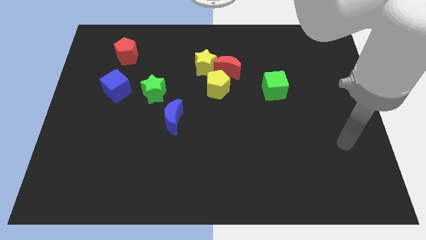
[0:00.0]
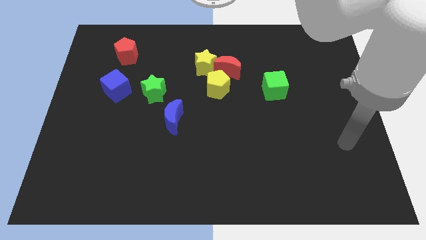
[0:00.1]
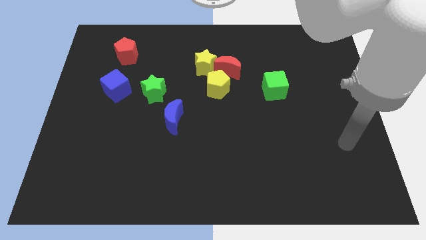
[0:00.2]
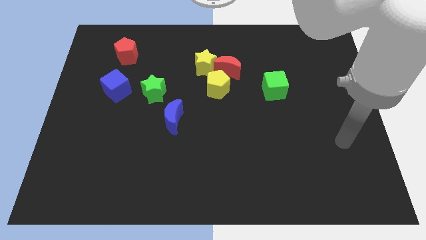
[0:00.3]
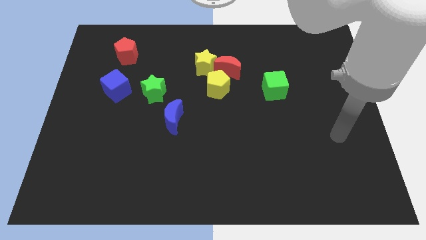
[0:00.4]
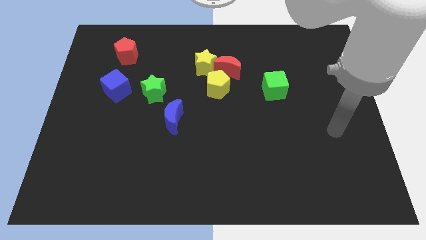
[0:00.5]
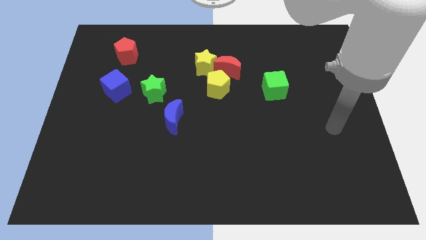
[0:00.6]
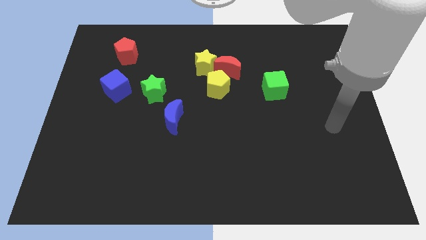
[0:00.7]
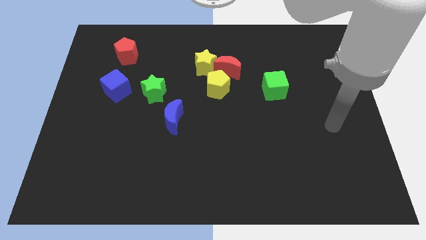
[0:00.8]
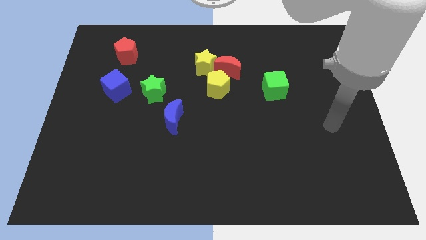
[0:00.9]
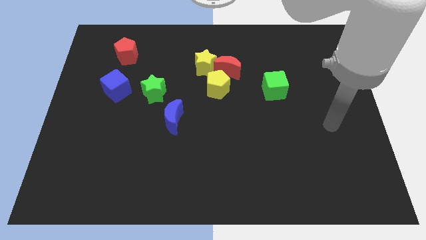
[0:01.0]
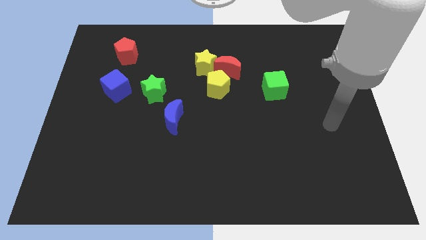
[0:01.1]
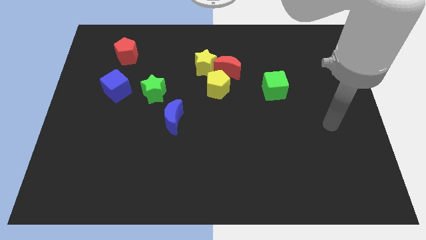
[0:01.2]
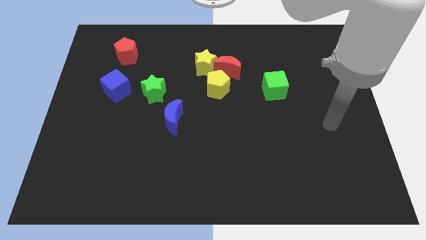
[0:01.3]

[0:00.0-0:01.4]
place your arm vertical bottom right to the green cube

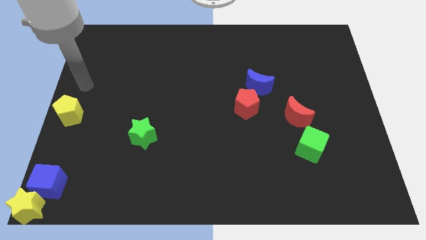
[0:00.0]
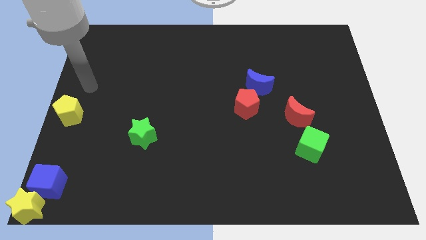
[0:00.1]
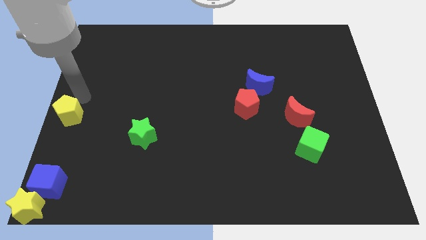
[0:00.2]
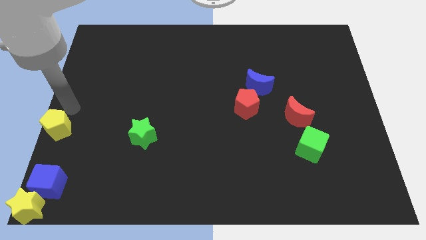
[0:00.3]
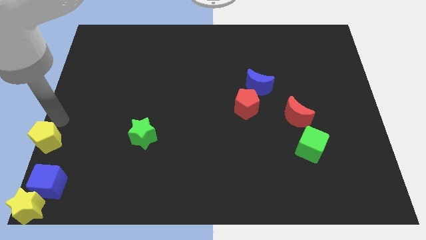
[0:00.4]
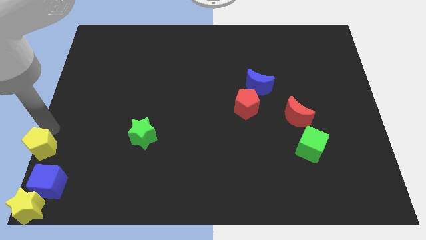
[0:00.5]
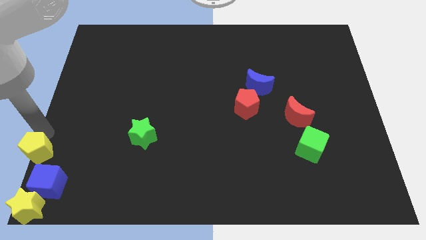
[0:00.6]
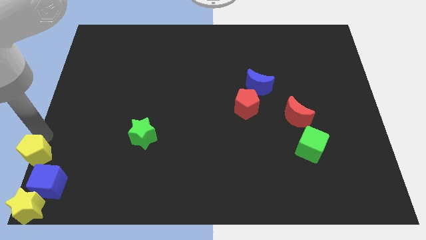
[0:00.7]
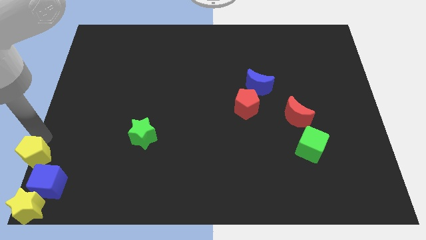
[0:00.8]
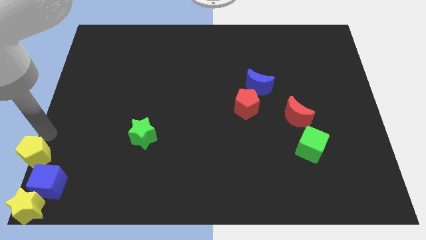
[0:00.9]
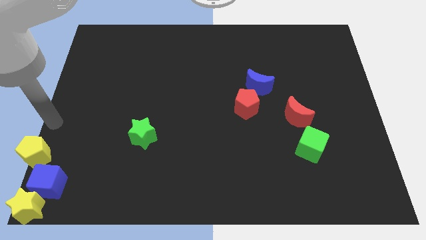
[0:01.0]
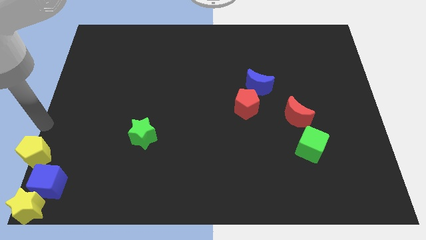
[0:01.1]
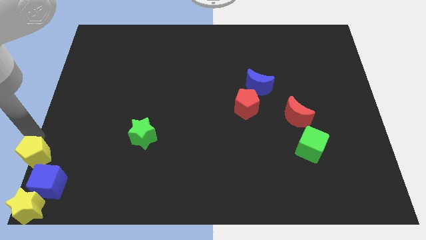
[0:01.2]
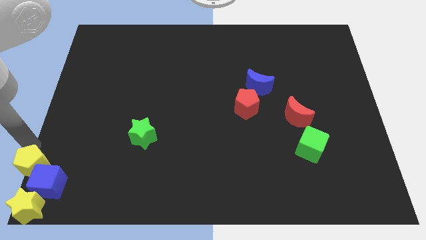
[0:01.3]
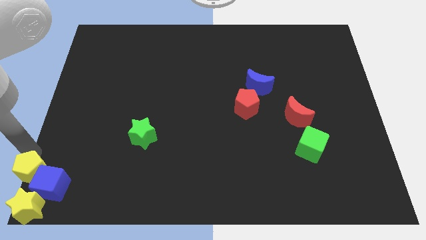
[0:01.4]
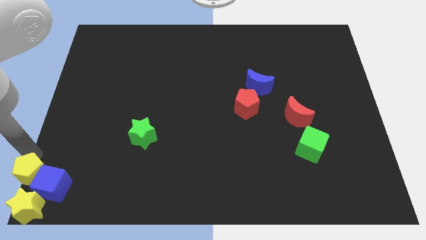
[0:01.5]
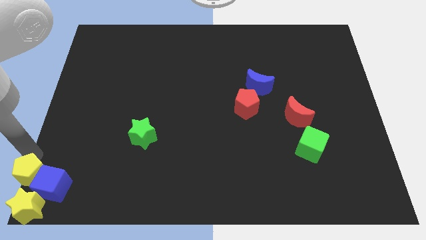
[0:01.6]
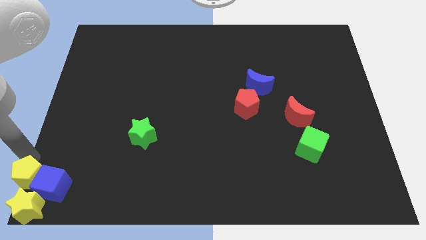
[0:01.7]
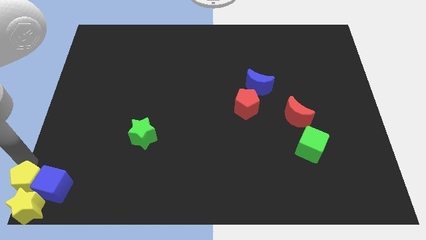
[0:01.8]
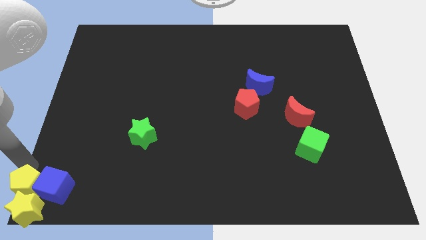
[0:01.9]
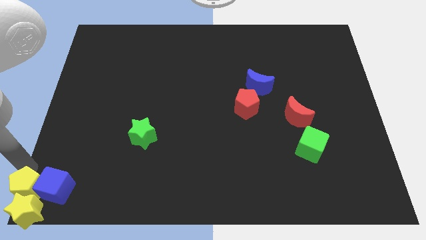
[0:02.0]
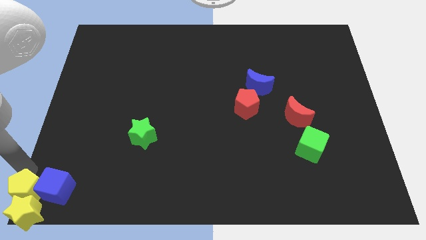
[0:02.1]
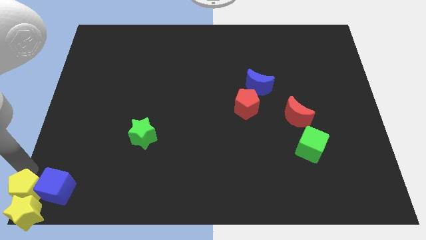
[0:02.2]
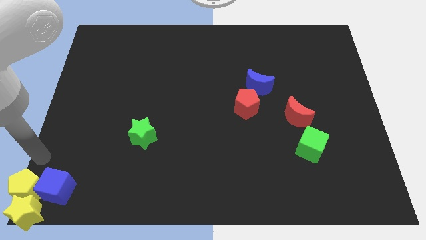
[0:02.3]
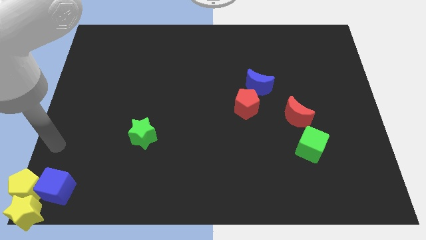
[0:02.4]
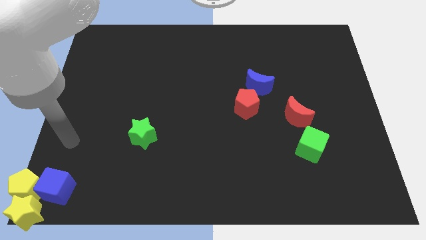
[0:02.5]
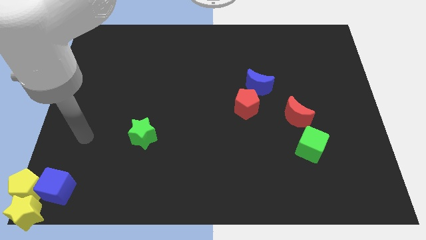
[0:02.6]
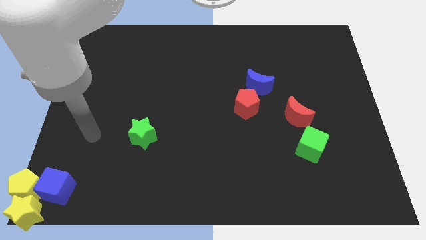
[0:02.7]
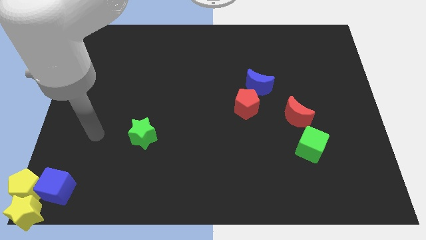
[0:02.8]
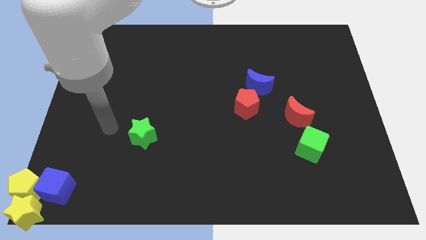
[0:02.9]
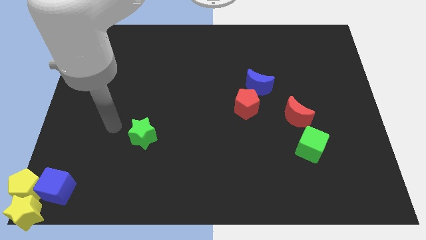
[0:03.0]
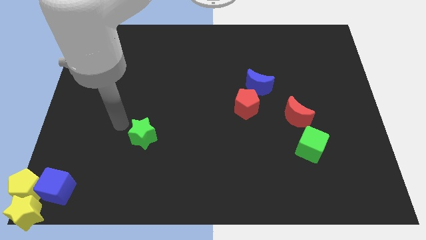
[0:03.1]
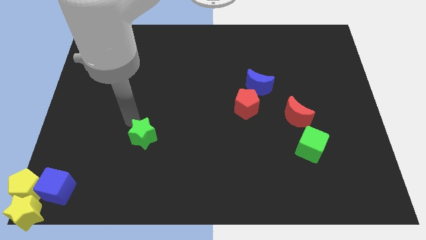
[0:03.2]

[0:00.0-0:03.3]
push yellow pentagon into the yellow star

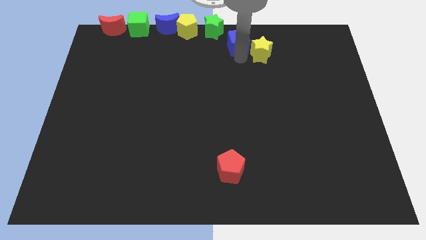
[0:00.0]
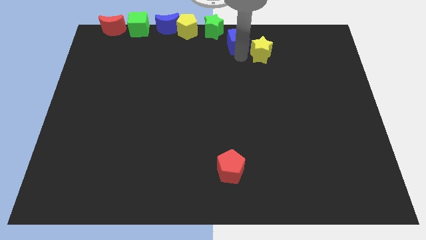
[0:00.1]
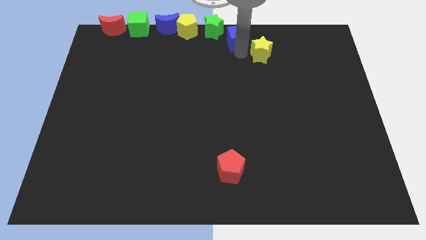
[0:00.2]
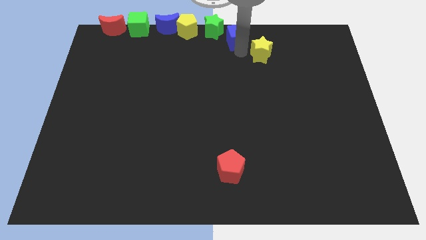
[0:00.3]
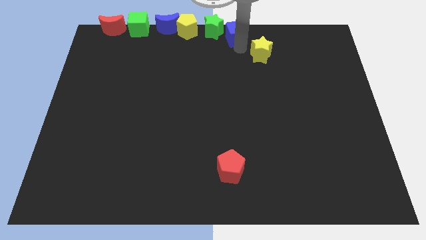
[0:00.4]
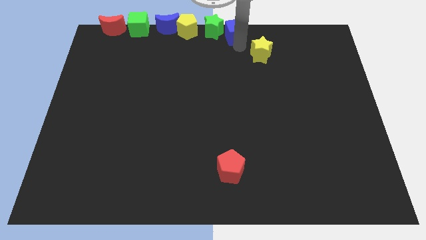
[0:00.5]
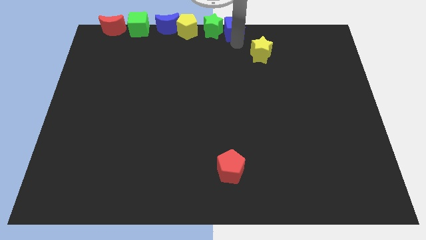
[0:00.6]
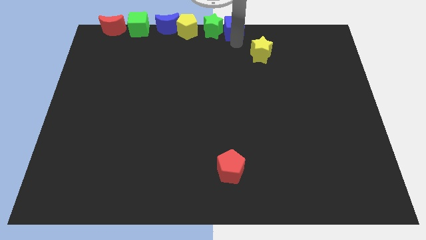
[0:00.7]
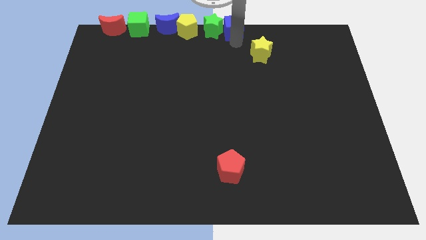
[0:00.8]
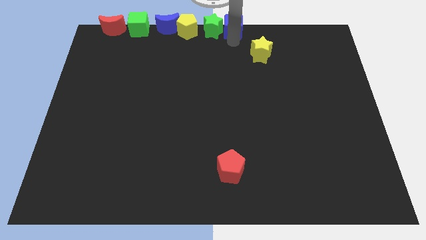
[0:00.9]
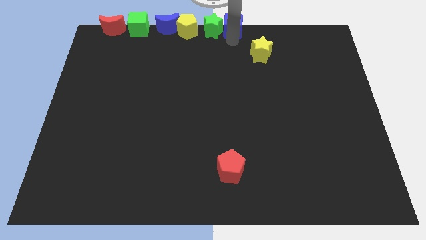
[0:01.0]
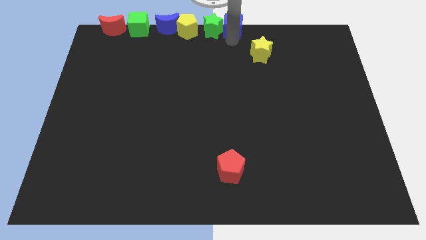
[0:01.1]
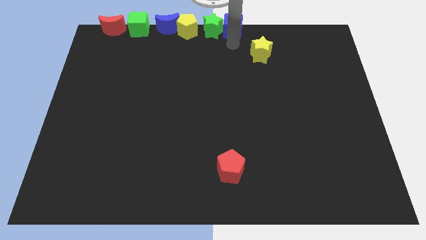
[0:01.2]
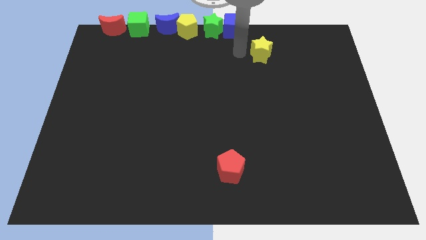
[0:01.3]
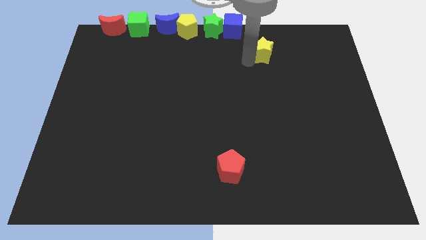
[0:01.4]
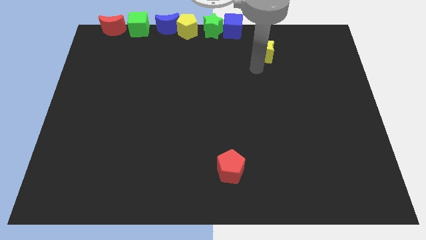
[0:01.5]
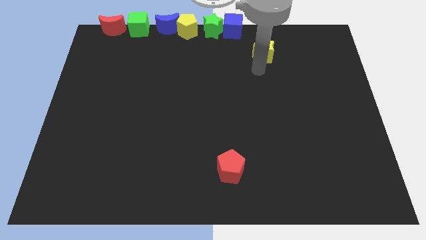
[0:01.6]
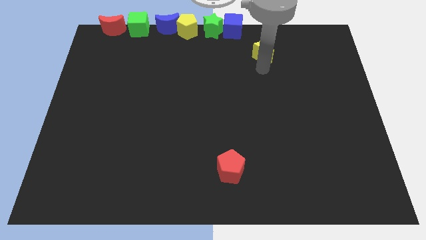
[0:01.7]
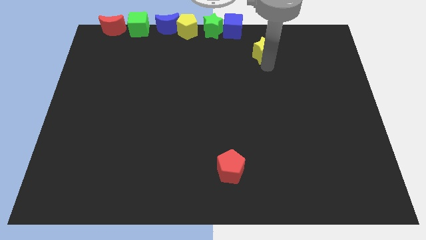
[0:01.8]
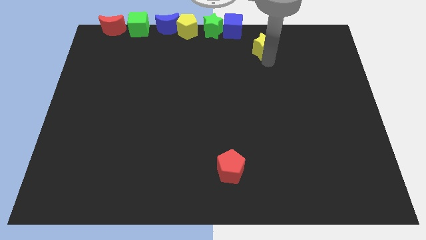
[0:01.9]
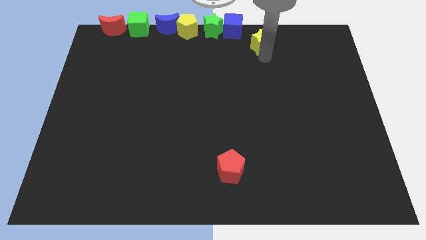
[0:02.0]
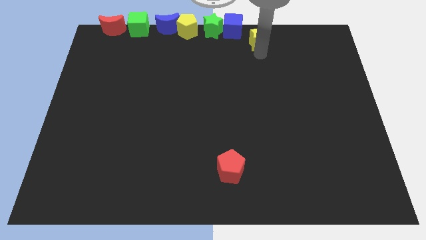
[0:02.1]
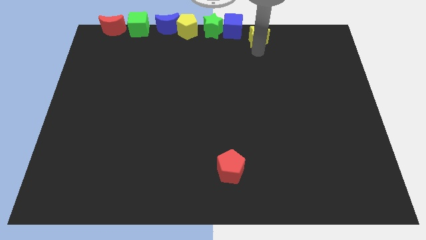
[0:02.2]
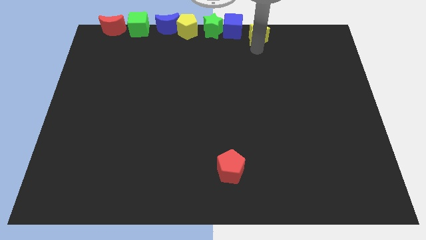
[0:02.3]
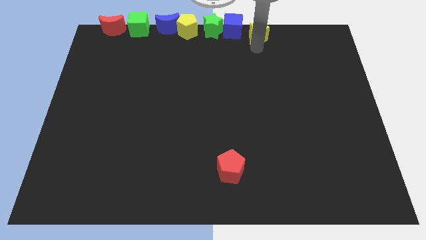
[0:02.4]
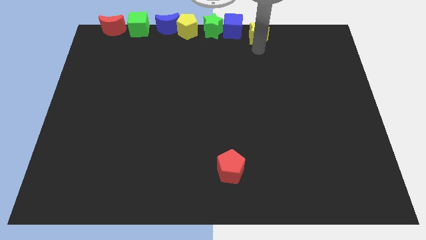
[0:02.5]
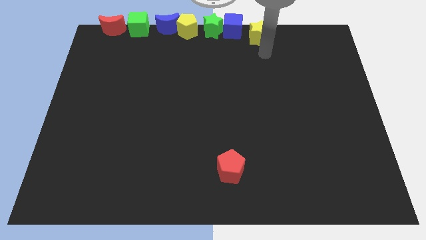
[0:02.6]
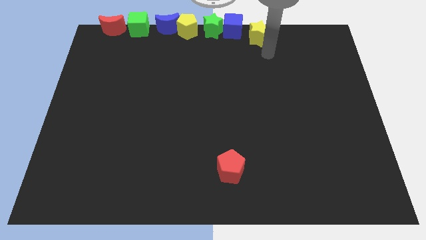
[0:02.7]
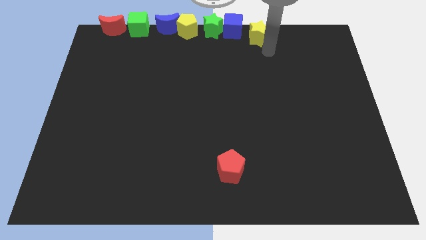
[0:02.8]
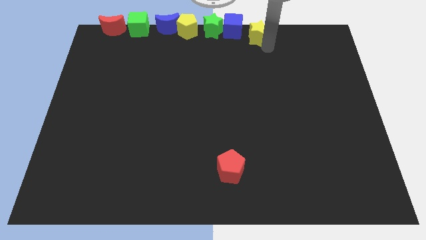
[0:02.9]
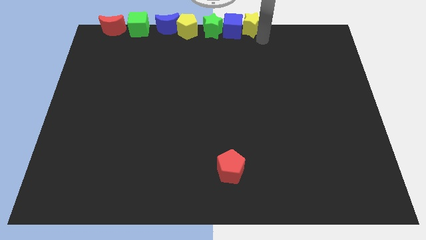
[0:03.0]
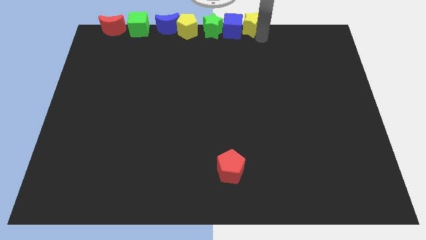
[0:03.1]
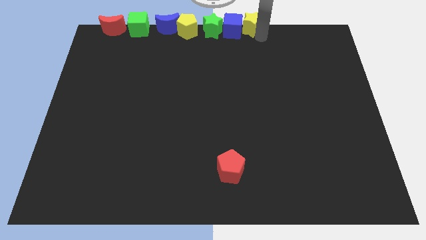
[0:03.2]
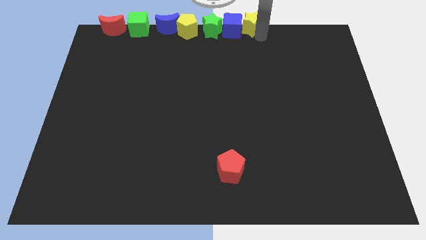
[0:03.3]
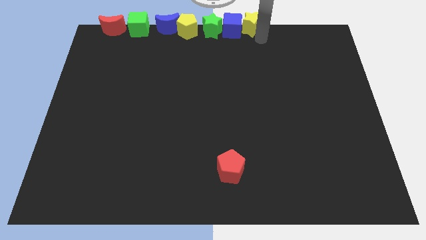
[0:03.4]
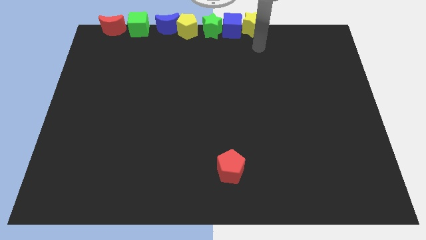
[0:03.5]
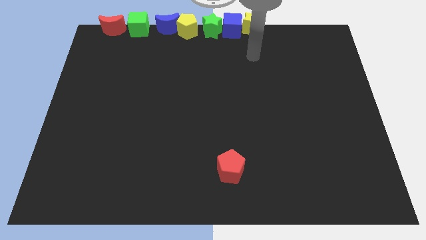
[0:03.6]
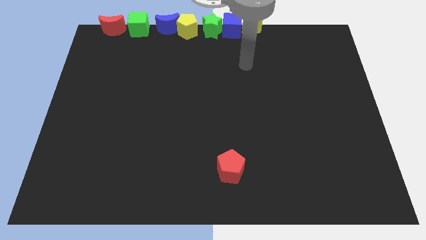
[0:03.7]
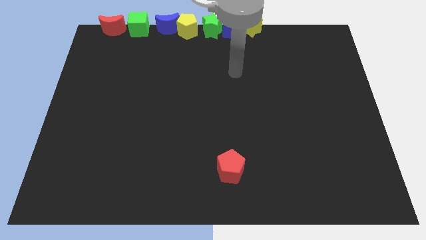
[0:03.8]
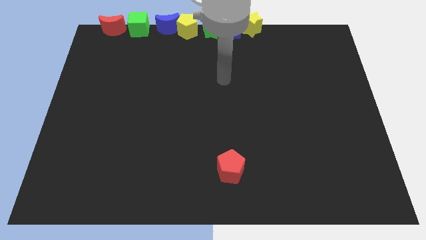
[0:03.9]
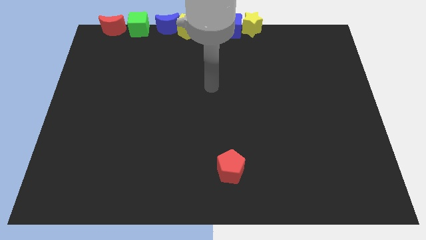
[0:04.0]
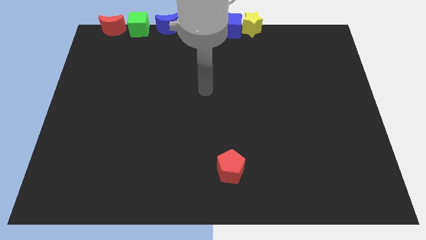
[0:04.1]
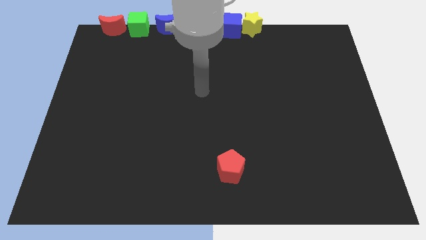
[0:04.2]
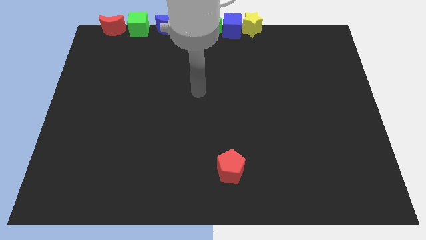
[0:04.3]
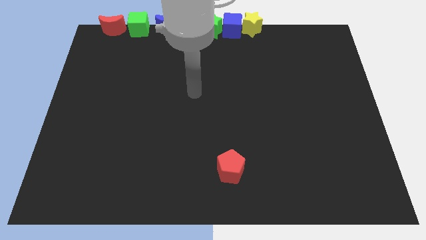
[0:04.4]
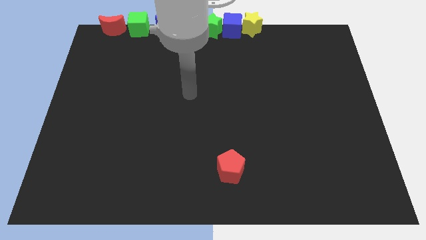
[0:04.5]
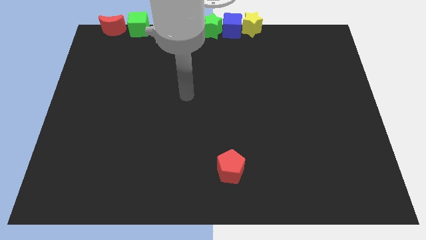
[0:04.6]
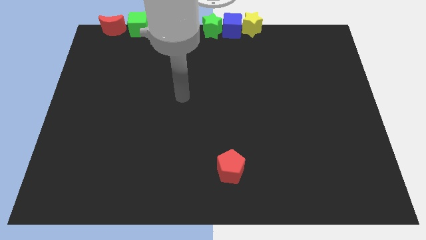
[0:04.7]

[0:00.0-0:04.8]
put the yellow star to the right of the blue cube
